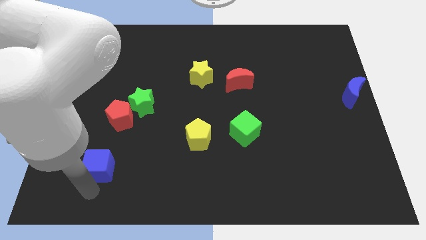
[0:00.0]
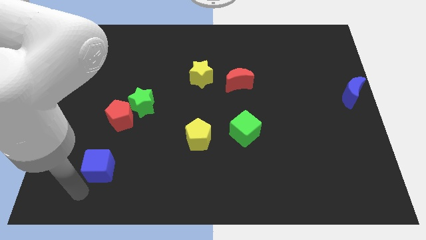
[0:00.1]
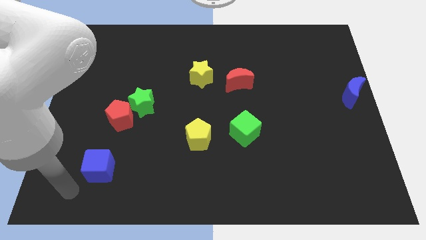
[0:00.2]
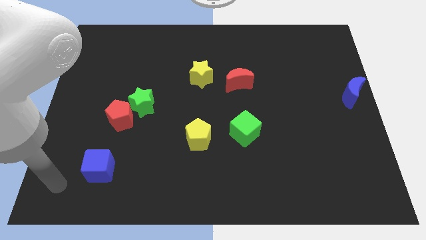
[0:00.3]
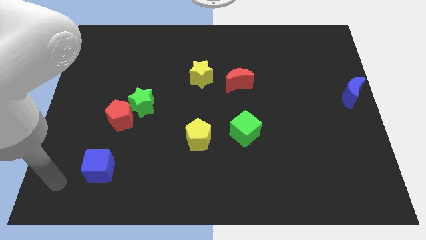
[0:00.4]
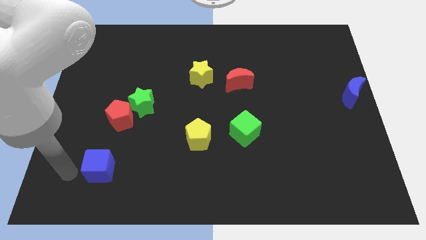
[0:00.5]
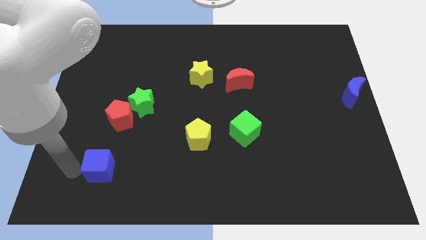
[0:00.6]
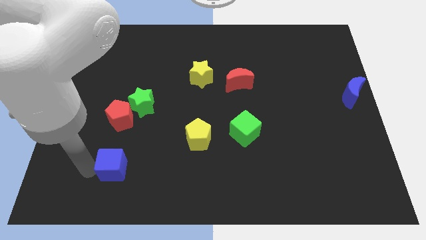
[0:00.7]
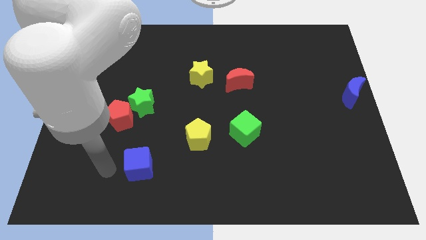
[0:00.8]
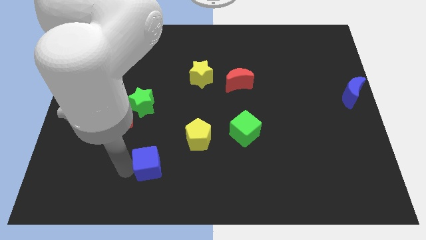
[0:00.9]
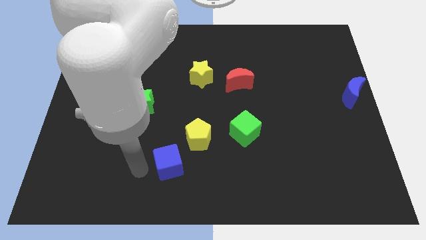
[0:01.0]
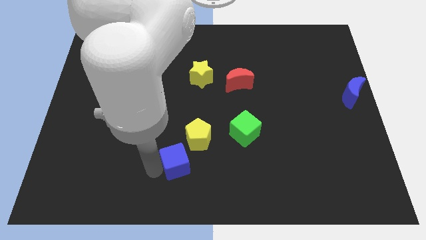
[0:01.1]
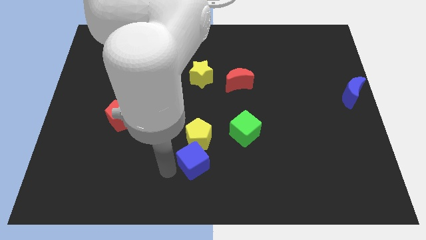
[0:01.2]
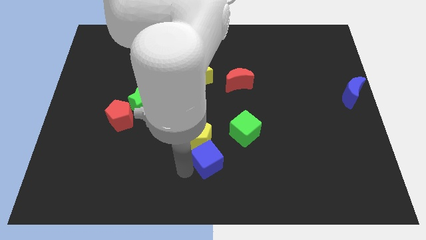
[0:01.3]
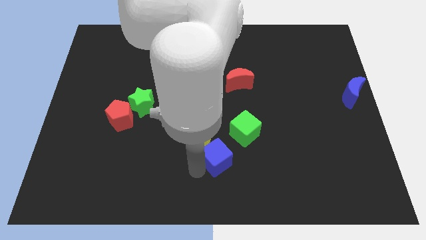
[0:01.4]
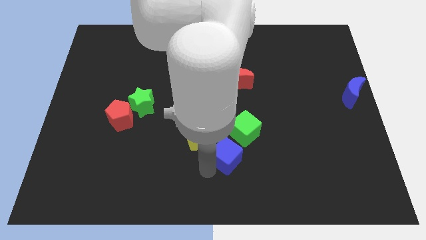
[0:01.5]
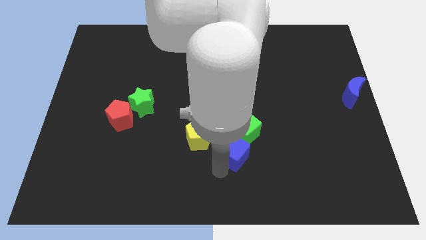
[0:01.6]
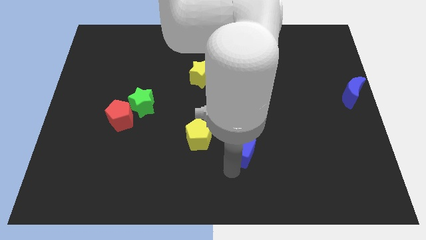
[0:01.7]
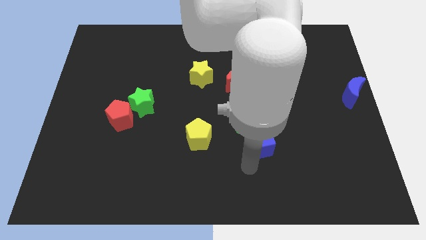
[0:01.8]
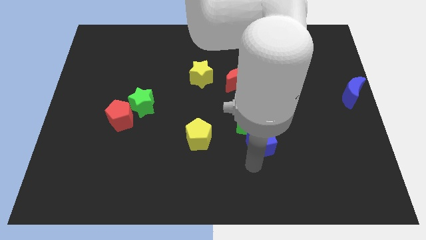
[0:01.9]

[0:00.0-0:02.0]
push the blue cube into the green cube

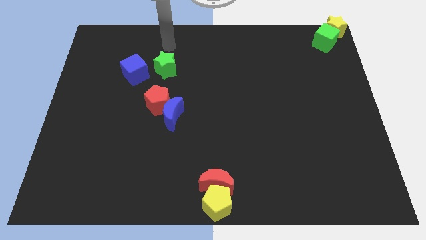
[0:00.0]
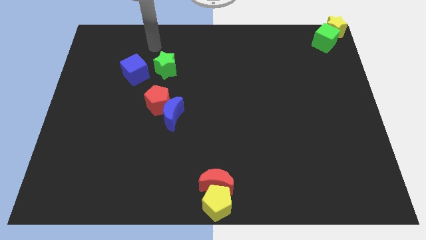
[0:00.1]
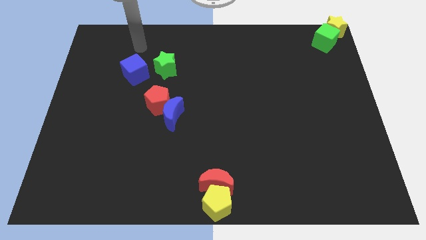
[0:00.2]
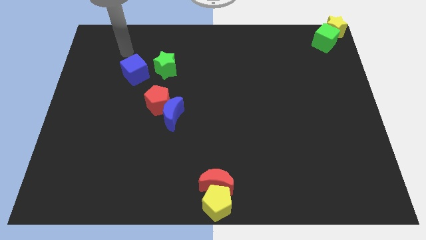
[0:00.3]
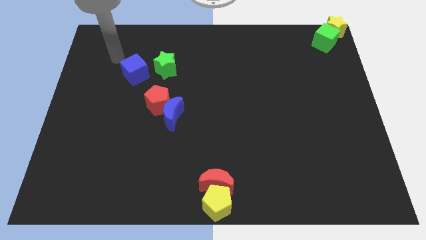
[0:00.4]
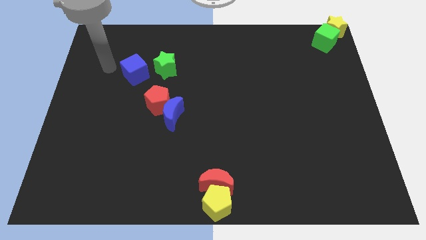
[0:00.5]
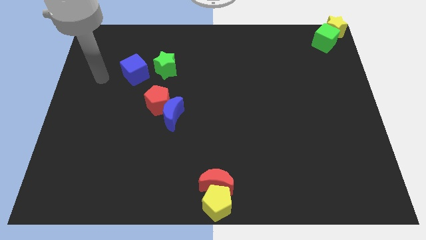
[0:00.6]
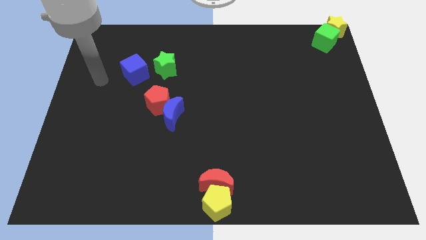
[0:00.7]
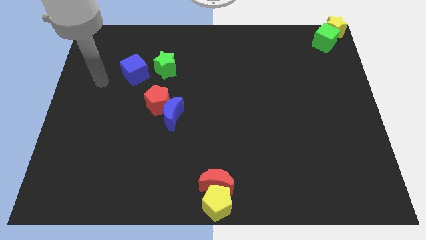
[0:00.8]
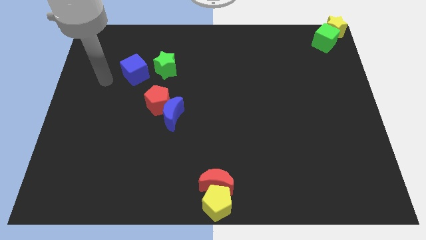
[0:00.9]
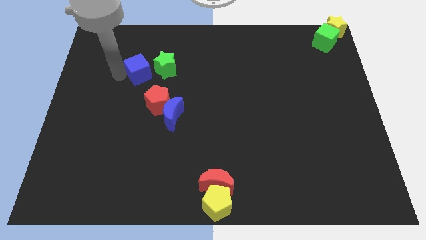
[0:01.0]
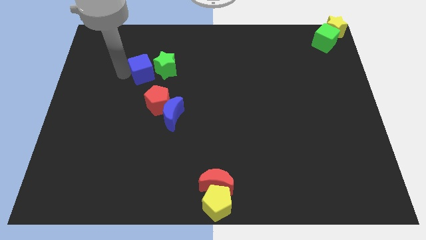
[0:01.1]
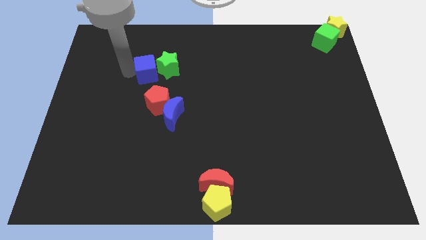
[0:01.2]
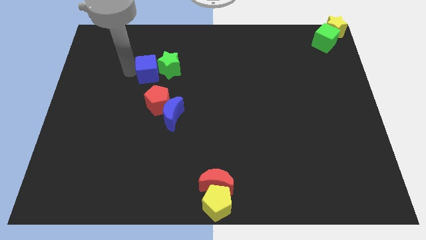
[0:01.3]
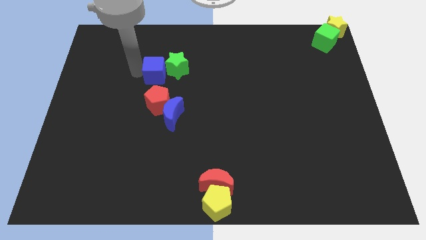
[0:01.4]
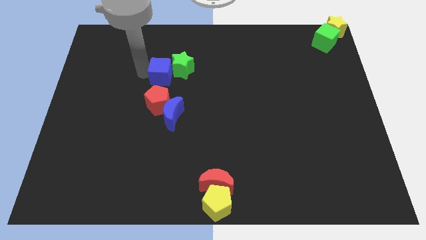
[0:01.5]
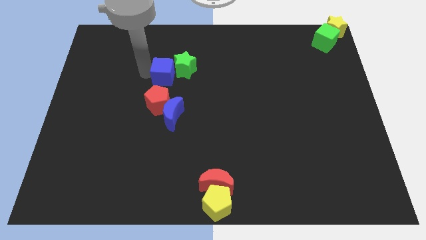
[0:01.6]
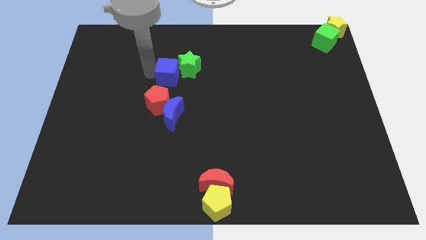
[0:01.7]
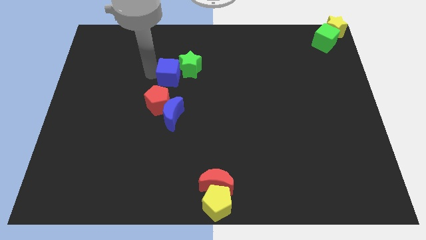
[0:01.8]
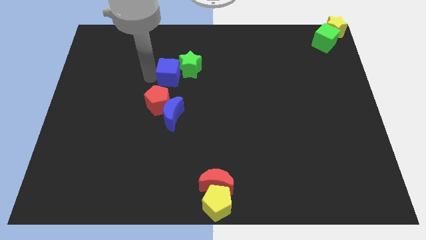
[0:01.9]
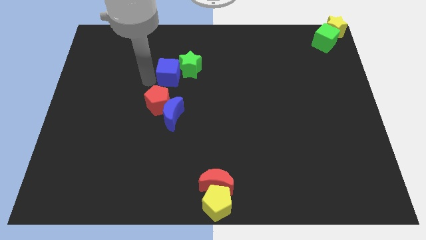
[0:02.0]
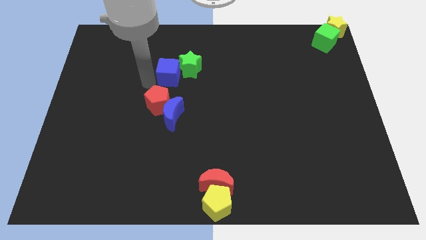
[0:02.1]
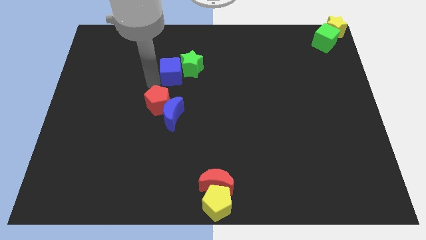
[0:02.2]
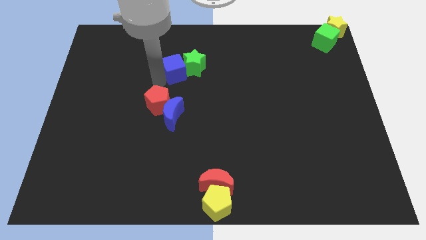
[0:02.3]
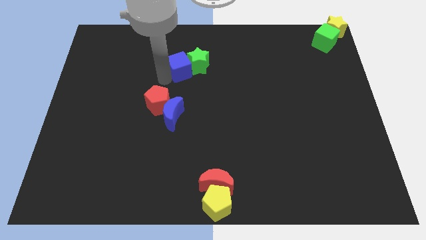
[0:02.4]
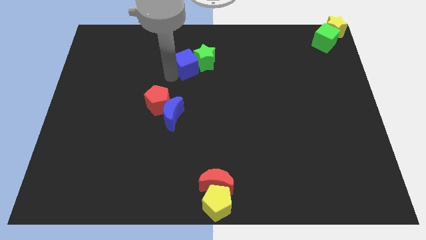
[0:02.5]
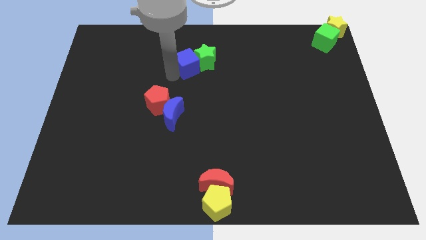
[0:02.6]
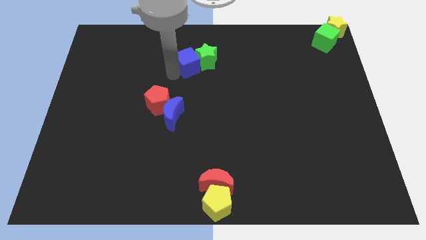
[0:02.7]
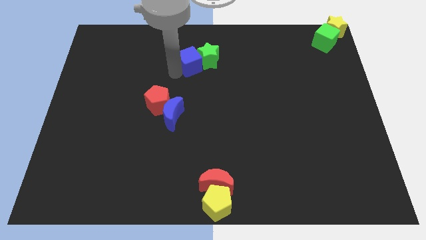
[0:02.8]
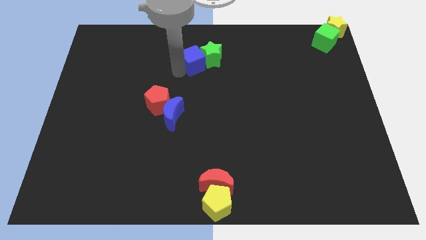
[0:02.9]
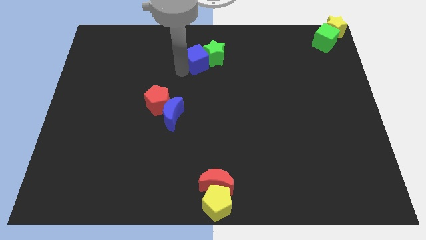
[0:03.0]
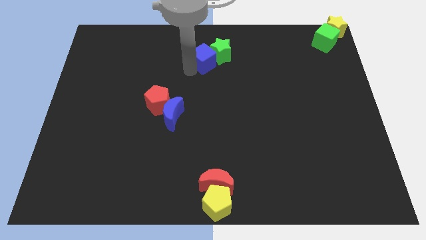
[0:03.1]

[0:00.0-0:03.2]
move the blue cube and green star to the center

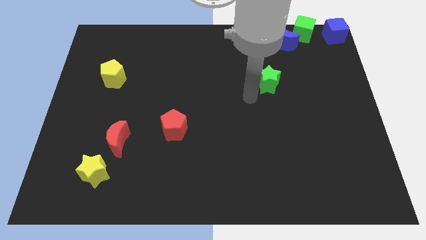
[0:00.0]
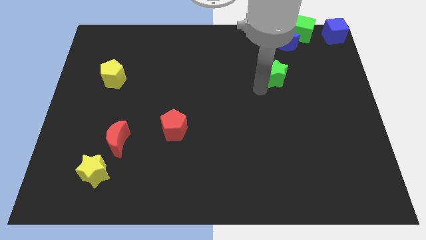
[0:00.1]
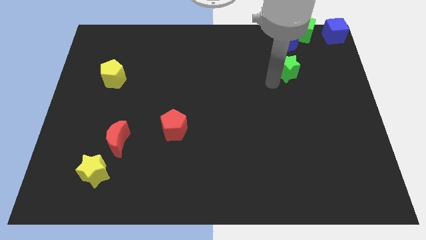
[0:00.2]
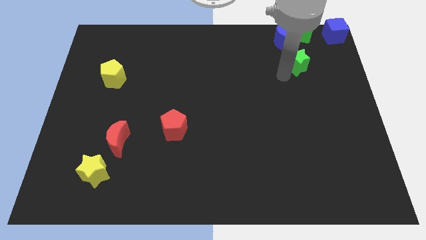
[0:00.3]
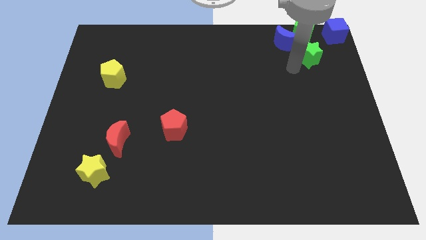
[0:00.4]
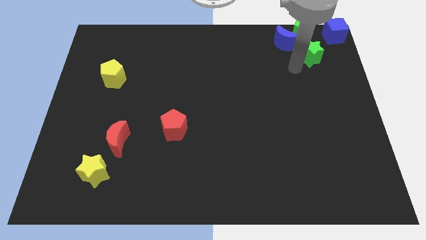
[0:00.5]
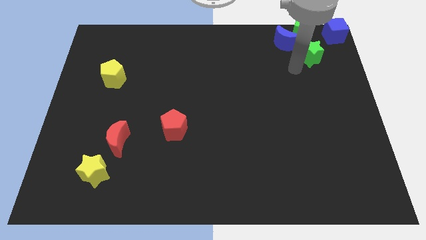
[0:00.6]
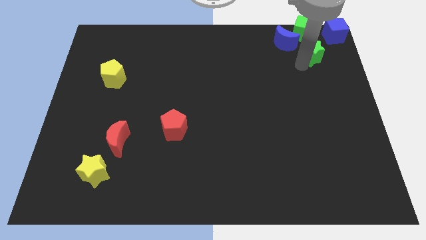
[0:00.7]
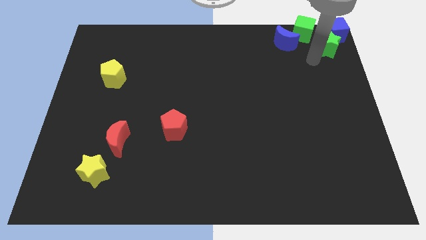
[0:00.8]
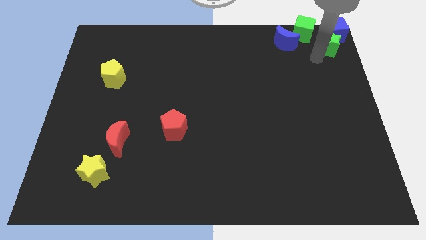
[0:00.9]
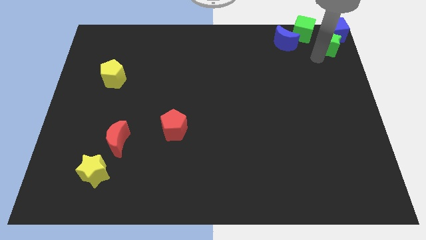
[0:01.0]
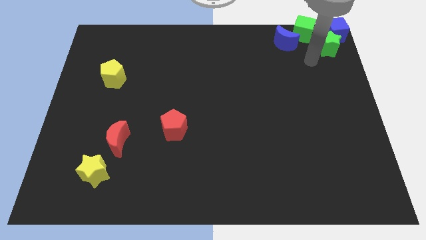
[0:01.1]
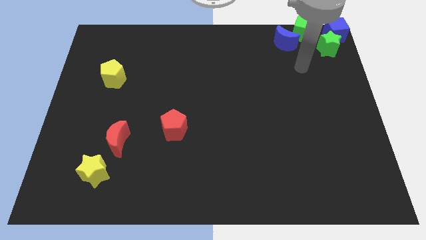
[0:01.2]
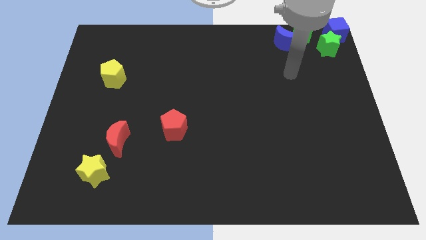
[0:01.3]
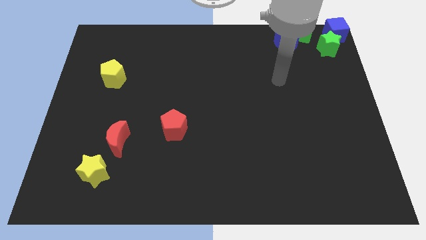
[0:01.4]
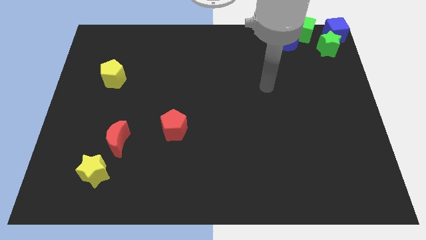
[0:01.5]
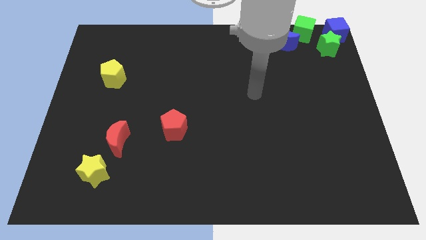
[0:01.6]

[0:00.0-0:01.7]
slide the green star into the blue cube

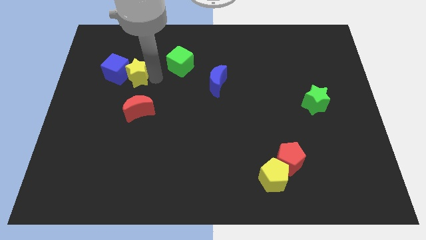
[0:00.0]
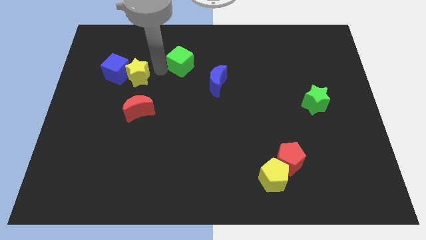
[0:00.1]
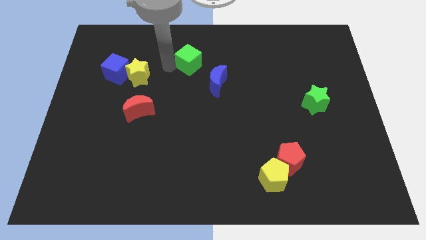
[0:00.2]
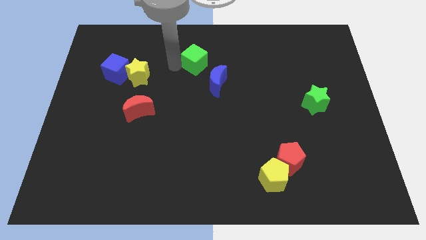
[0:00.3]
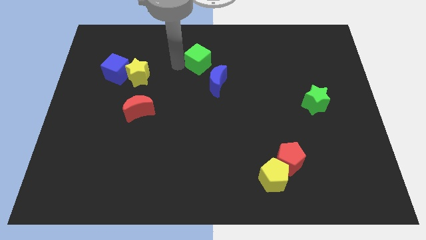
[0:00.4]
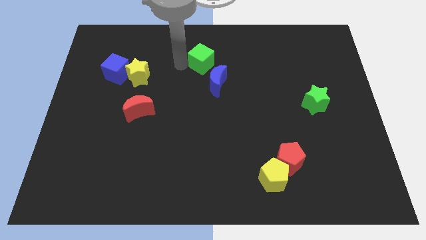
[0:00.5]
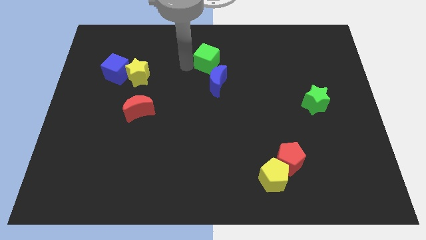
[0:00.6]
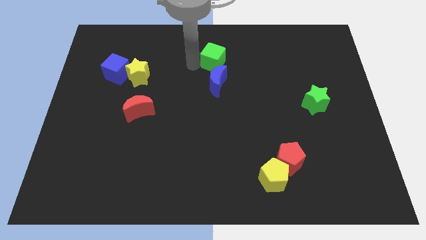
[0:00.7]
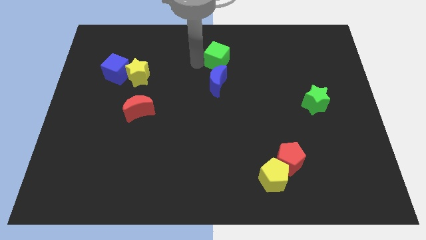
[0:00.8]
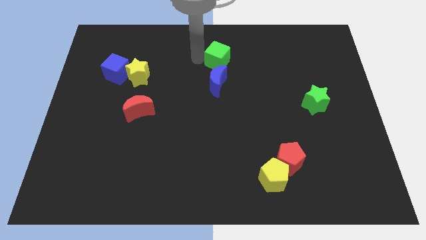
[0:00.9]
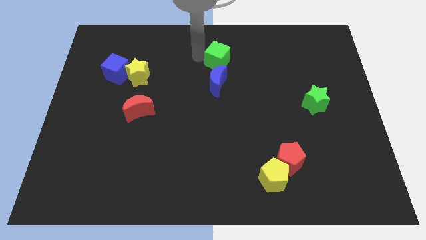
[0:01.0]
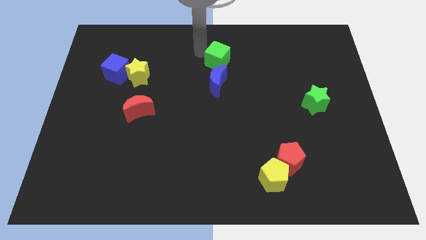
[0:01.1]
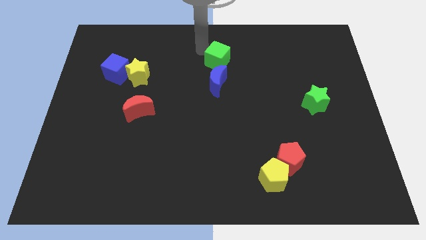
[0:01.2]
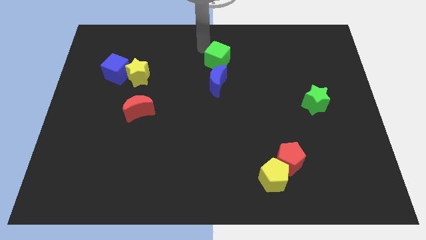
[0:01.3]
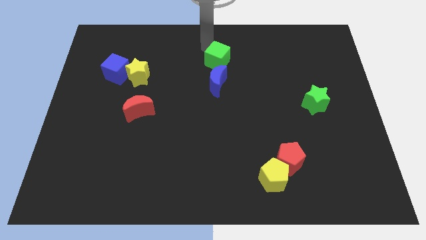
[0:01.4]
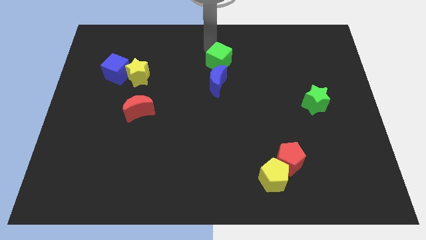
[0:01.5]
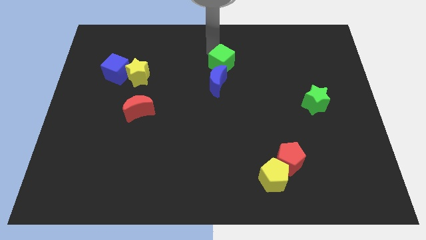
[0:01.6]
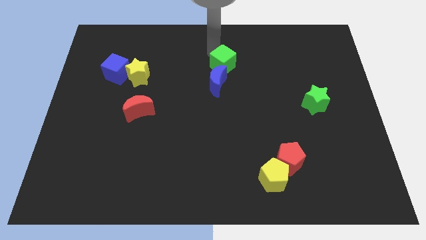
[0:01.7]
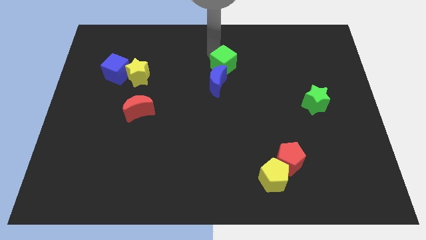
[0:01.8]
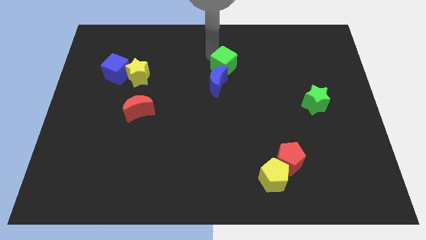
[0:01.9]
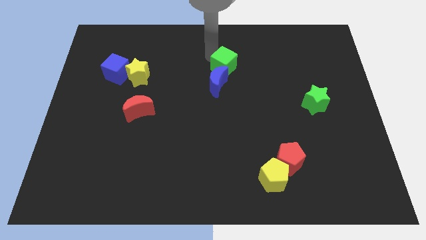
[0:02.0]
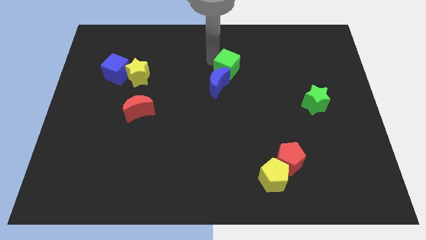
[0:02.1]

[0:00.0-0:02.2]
push the green cube into blue crescent
